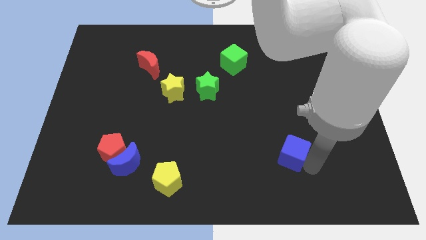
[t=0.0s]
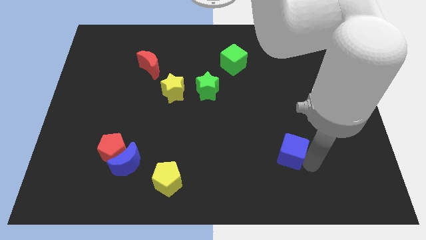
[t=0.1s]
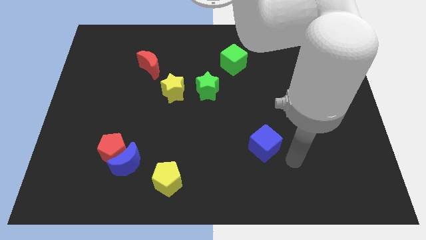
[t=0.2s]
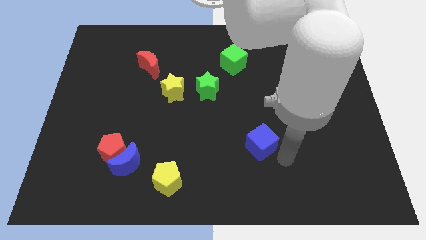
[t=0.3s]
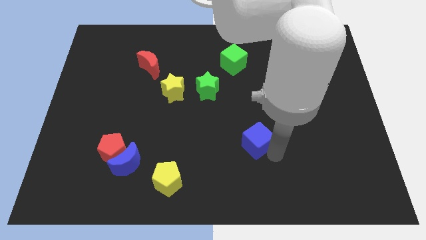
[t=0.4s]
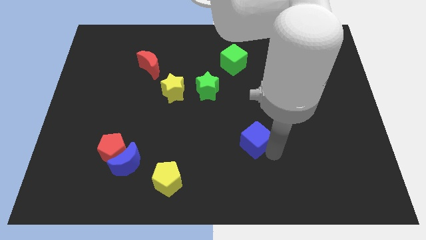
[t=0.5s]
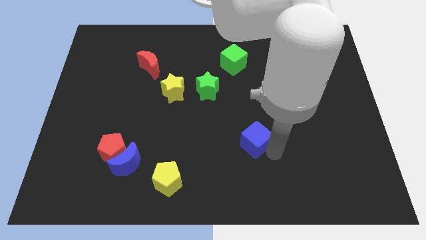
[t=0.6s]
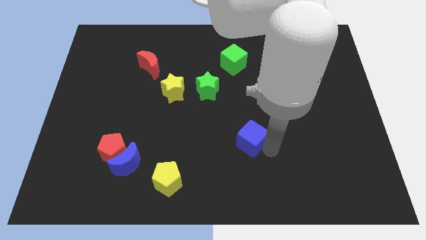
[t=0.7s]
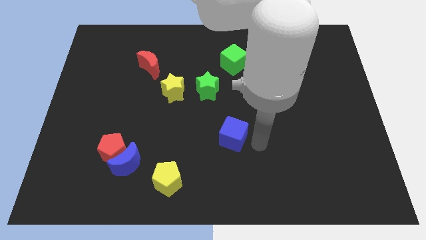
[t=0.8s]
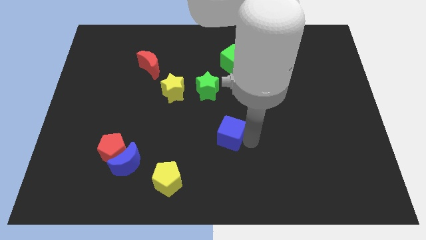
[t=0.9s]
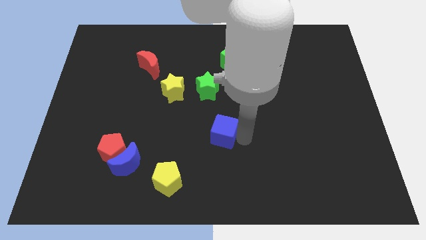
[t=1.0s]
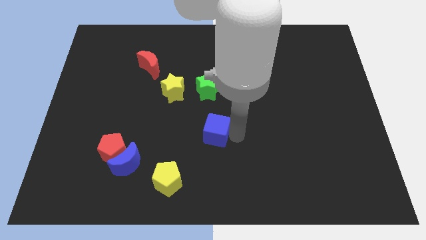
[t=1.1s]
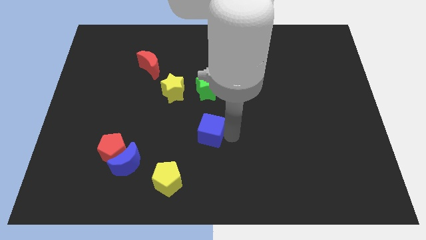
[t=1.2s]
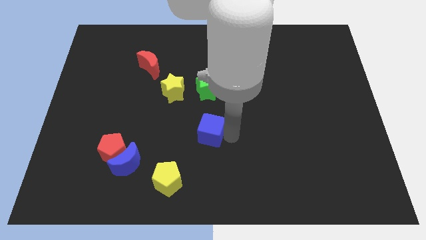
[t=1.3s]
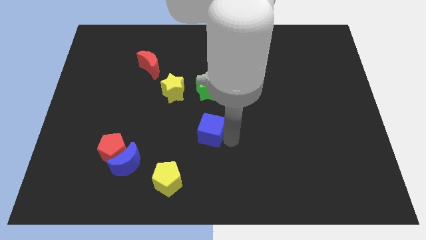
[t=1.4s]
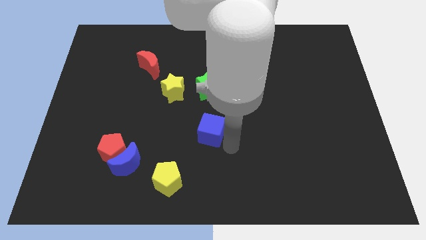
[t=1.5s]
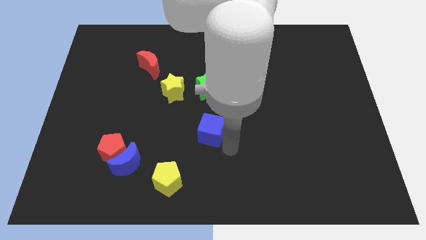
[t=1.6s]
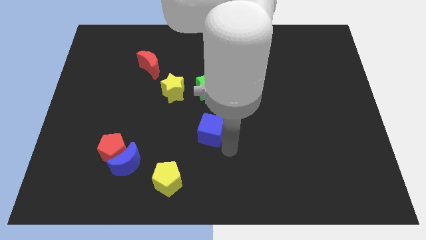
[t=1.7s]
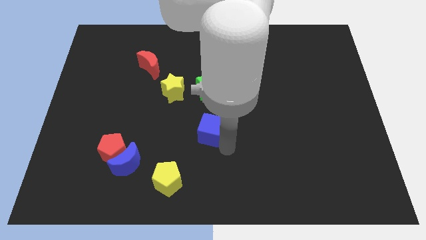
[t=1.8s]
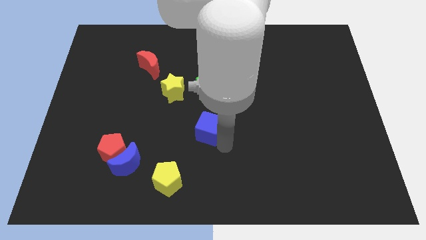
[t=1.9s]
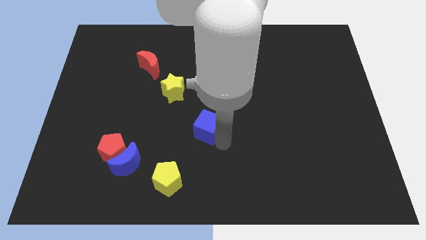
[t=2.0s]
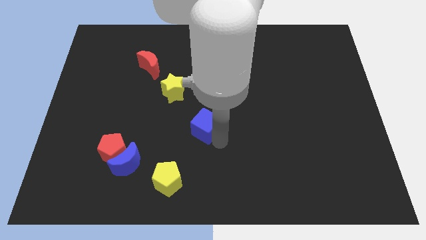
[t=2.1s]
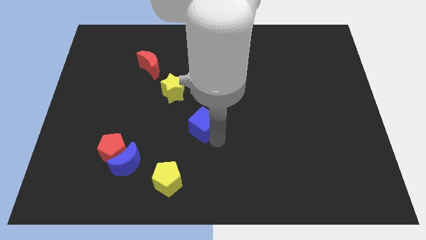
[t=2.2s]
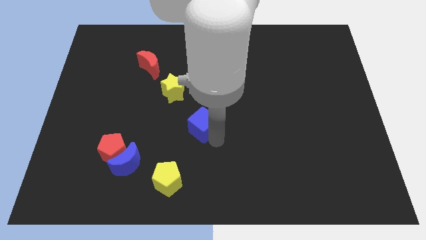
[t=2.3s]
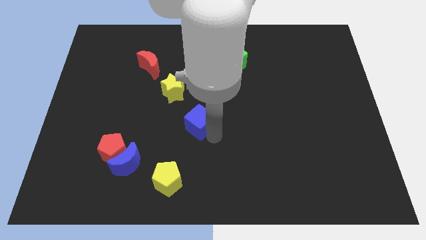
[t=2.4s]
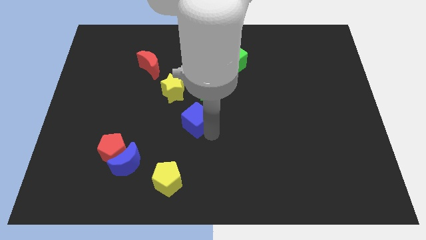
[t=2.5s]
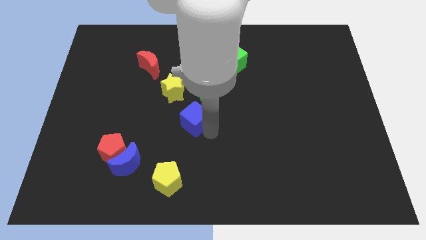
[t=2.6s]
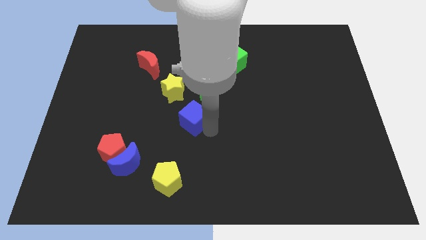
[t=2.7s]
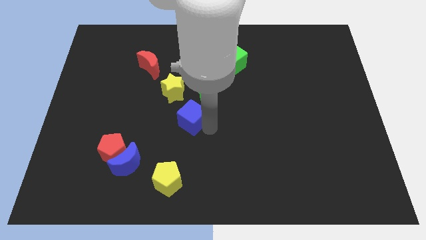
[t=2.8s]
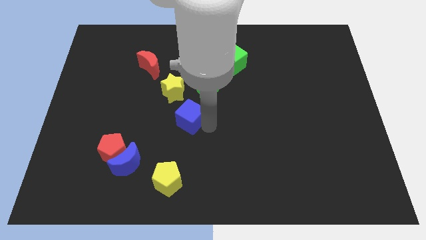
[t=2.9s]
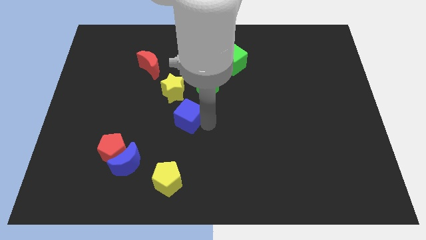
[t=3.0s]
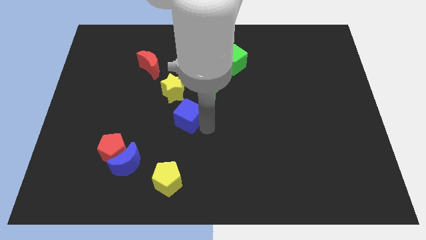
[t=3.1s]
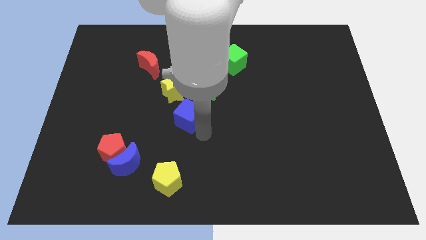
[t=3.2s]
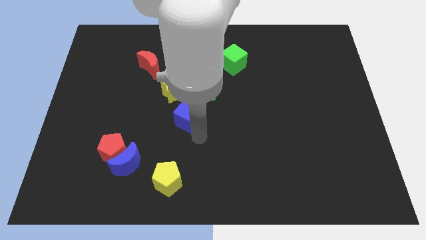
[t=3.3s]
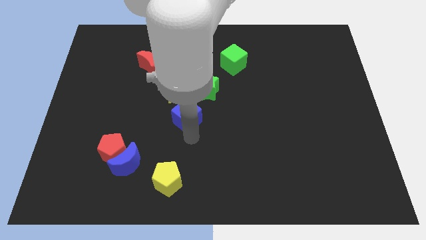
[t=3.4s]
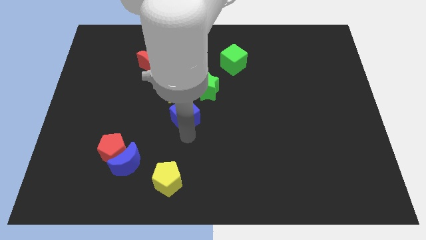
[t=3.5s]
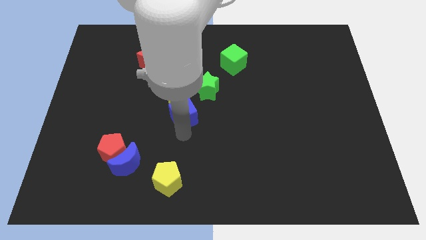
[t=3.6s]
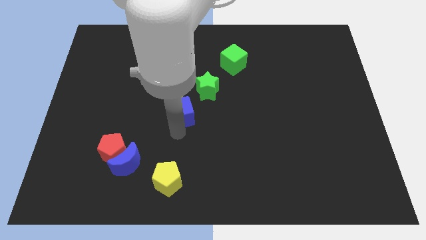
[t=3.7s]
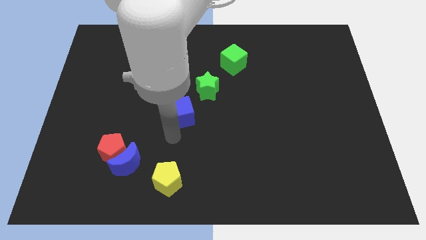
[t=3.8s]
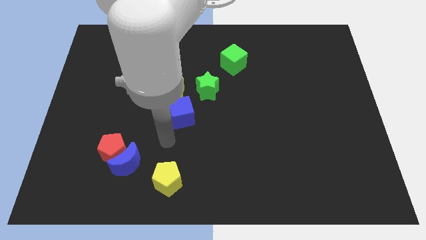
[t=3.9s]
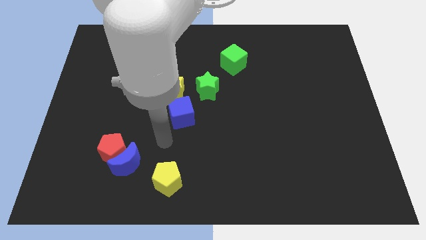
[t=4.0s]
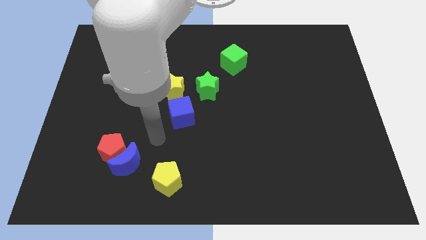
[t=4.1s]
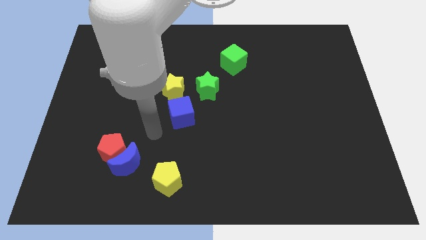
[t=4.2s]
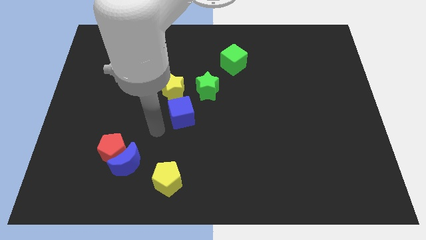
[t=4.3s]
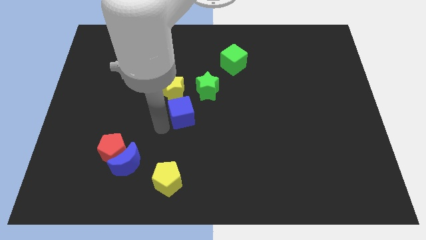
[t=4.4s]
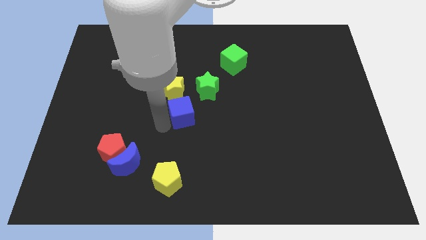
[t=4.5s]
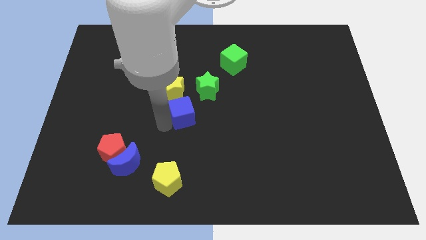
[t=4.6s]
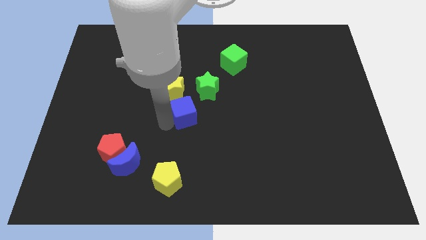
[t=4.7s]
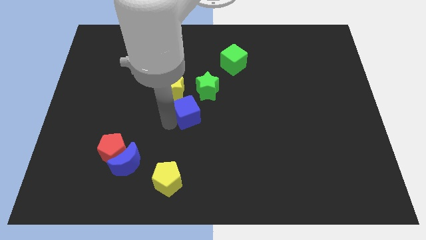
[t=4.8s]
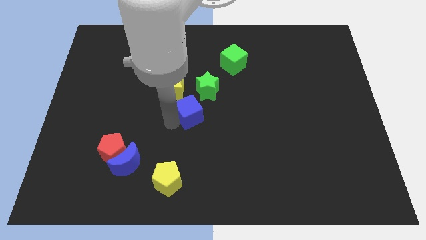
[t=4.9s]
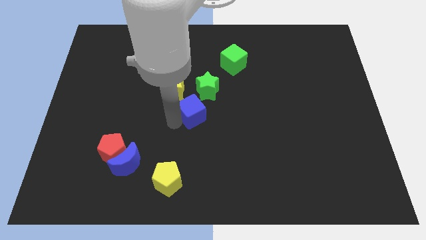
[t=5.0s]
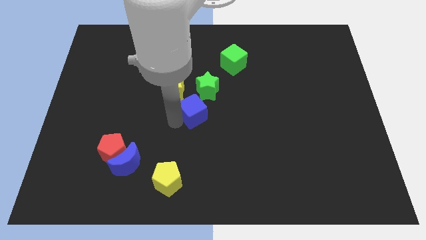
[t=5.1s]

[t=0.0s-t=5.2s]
place the blue cube below yellow star and green star

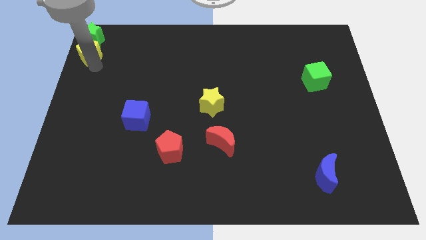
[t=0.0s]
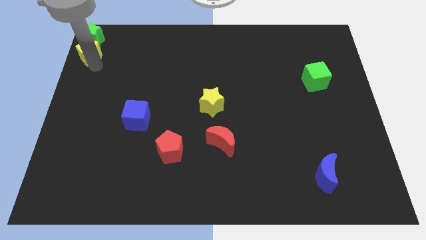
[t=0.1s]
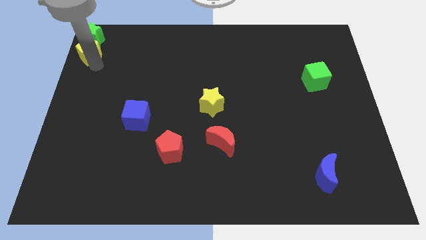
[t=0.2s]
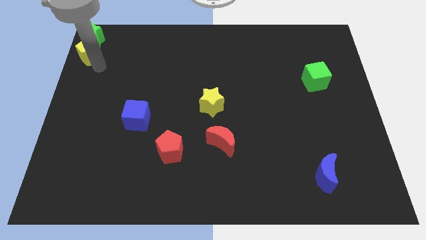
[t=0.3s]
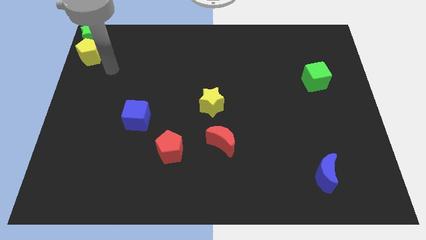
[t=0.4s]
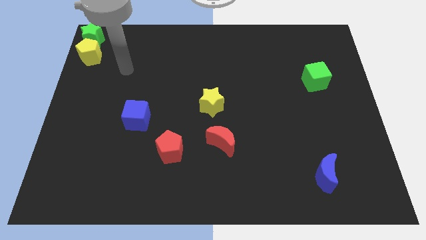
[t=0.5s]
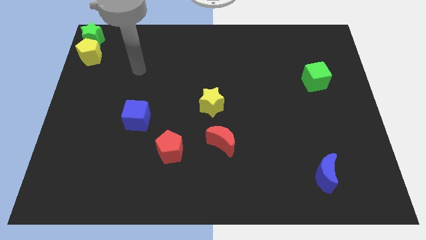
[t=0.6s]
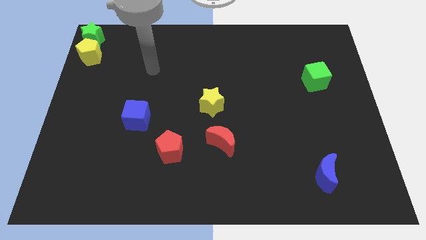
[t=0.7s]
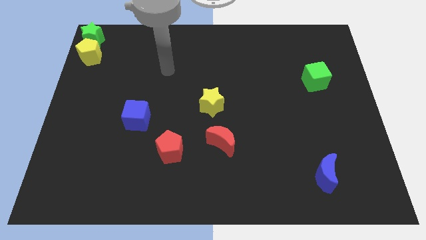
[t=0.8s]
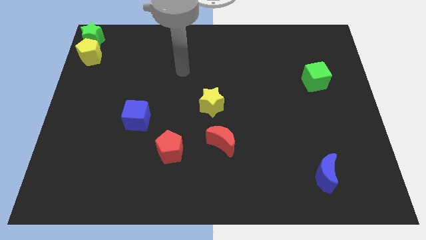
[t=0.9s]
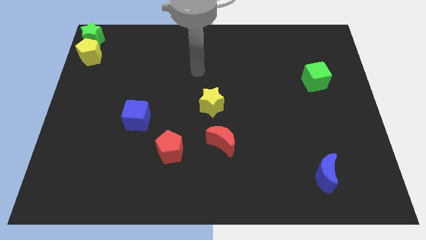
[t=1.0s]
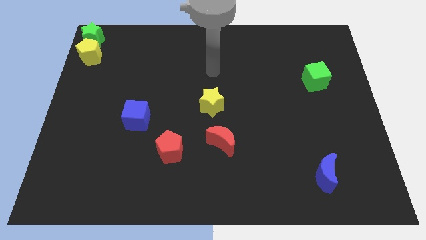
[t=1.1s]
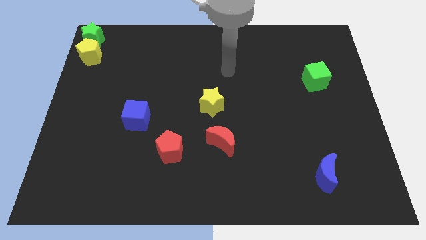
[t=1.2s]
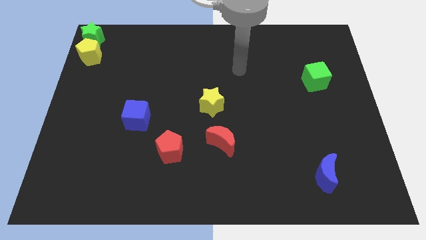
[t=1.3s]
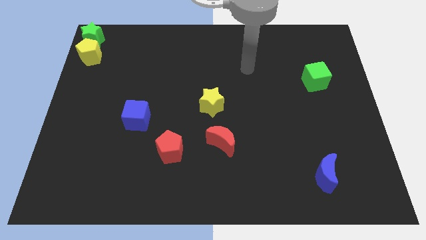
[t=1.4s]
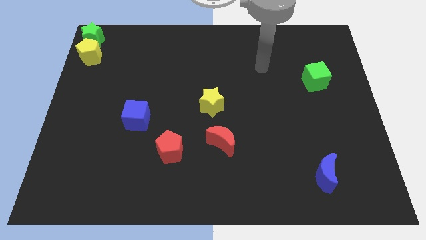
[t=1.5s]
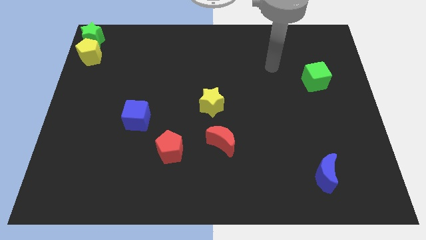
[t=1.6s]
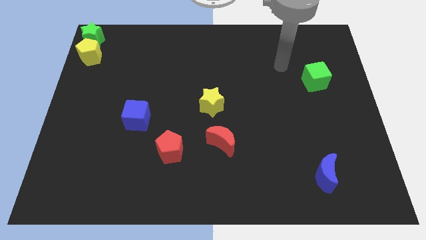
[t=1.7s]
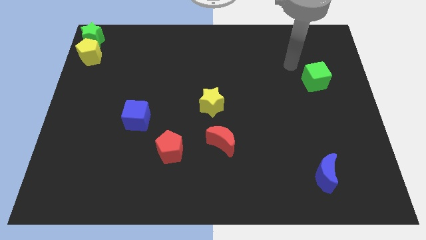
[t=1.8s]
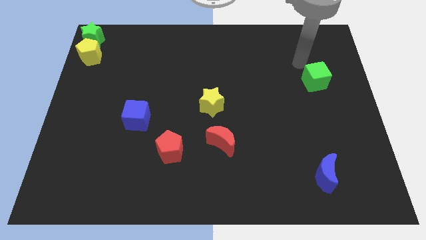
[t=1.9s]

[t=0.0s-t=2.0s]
move arm away from green star

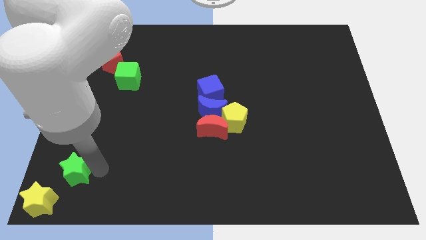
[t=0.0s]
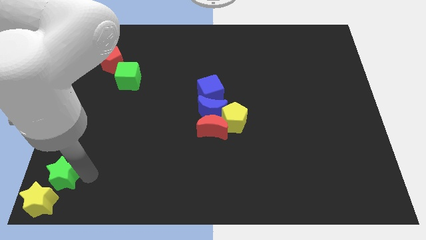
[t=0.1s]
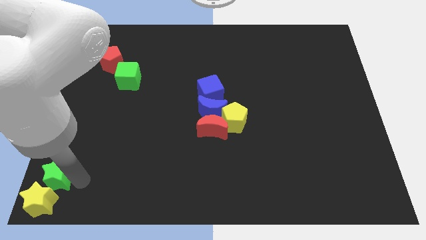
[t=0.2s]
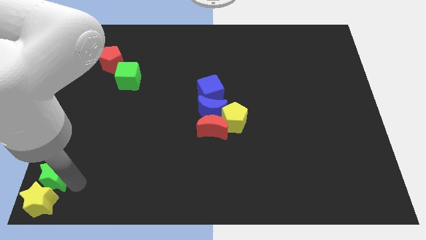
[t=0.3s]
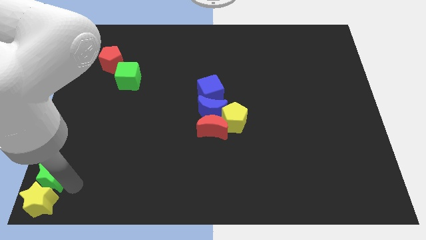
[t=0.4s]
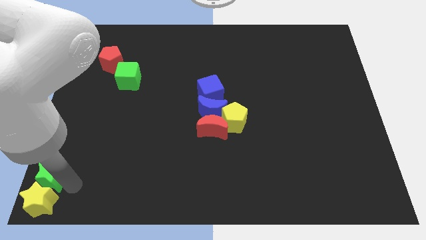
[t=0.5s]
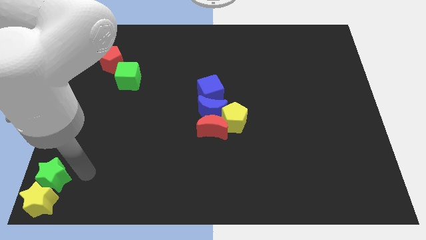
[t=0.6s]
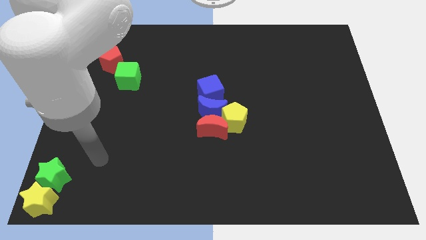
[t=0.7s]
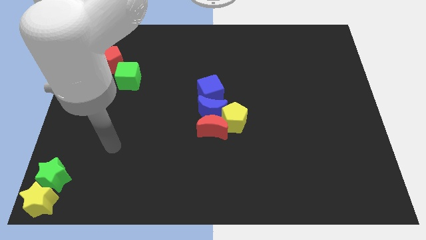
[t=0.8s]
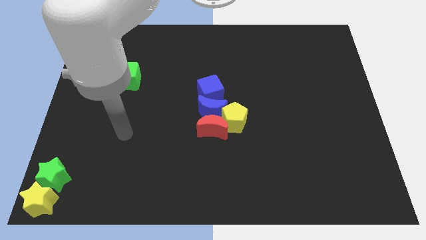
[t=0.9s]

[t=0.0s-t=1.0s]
push the green star towards the yellow star at the bottom left corner

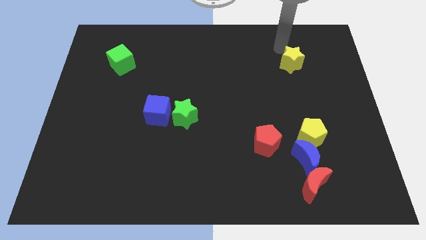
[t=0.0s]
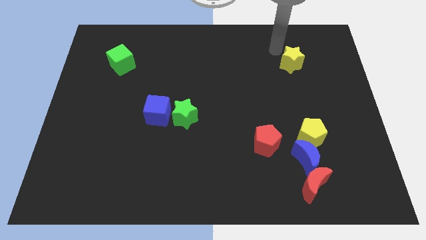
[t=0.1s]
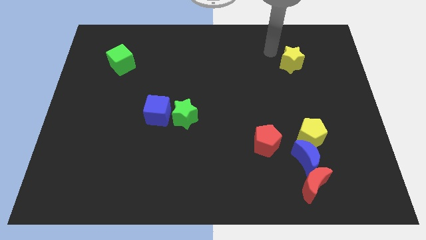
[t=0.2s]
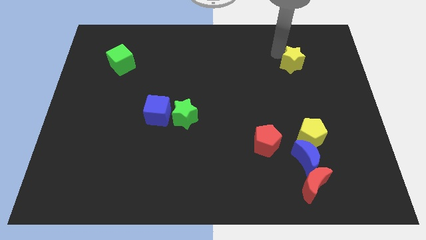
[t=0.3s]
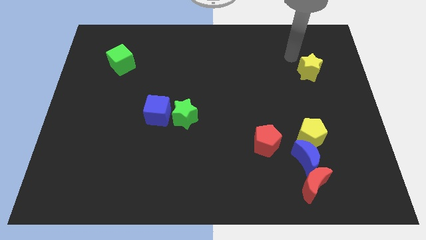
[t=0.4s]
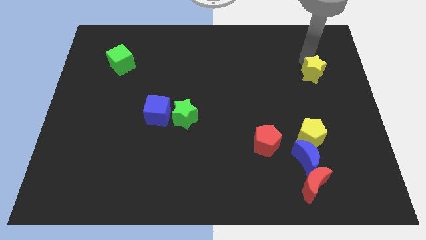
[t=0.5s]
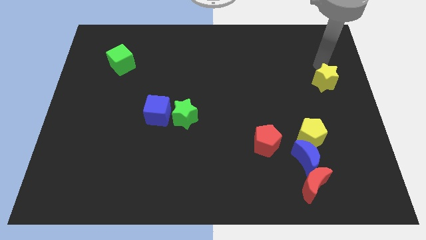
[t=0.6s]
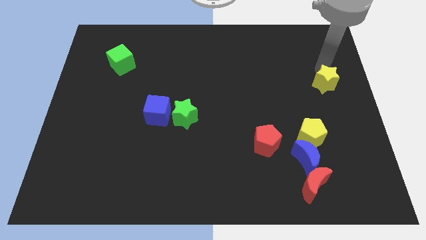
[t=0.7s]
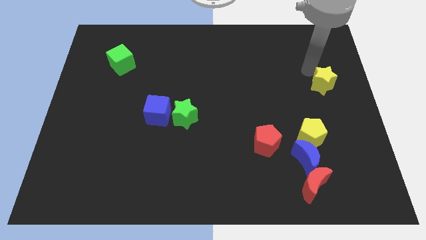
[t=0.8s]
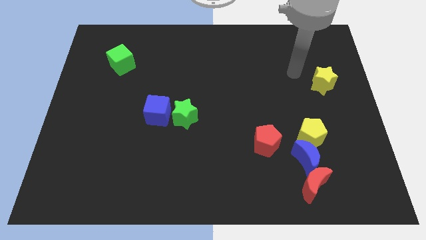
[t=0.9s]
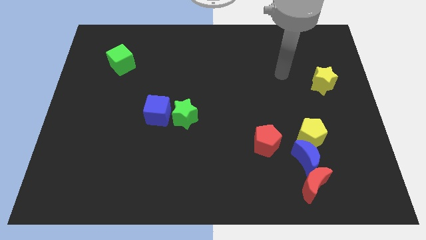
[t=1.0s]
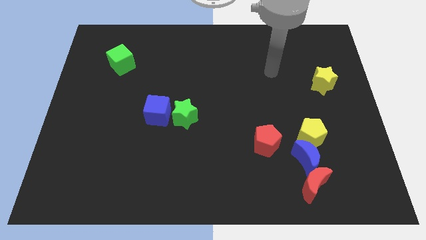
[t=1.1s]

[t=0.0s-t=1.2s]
push the yellow star to the right of the board
